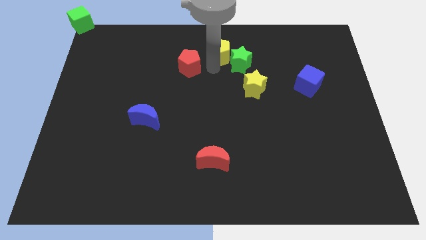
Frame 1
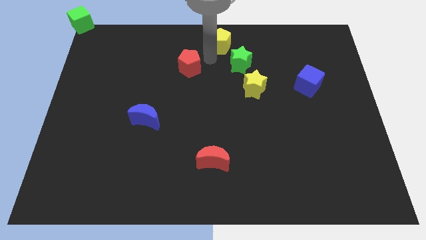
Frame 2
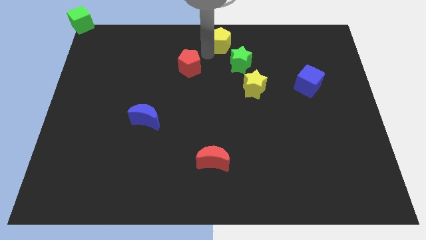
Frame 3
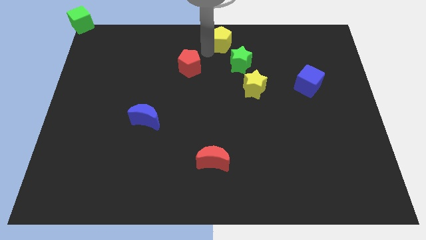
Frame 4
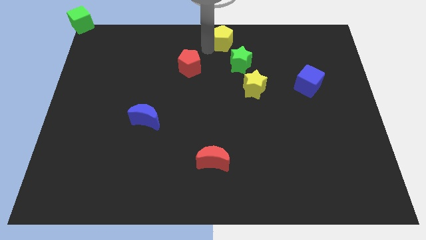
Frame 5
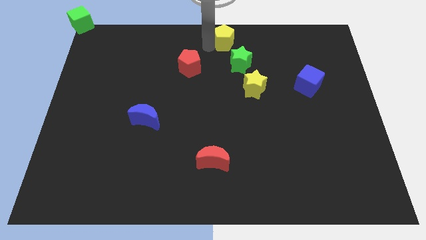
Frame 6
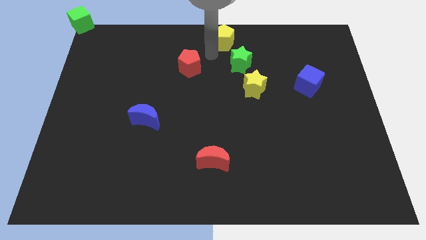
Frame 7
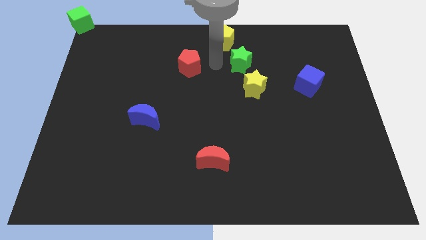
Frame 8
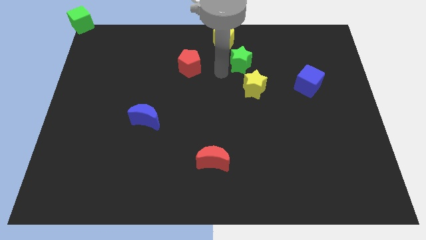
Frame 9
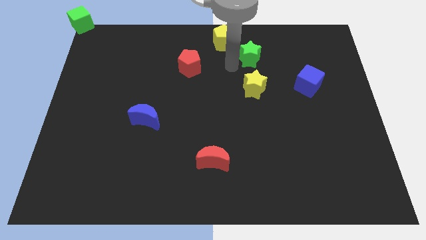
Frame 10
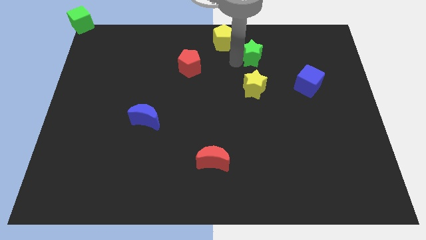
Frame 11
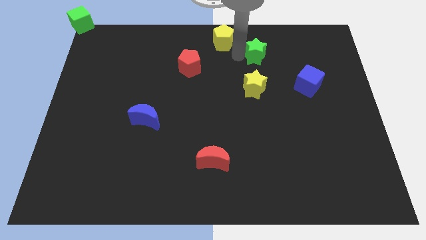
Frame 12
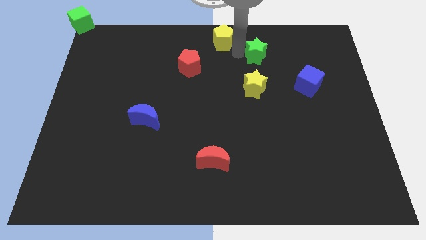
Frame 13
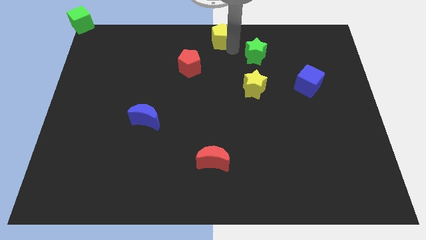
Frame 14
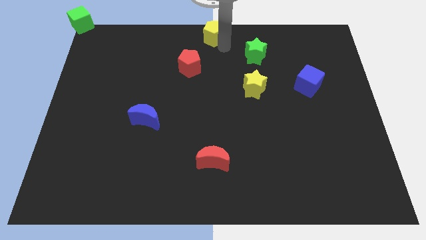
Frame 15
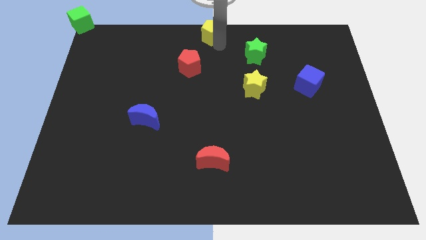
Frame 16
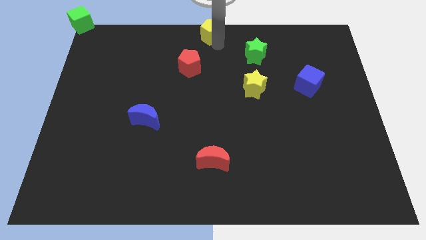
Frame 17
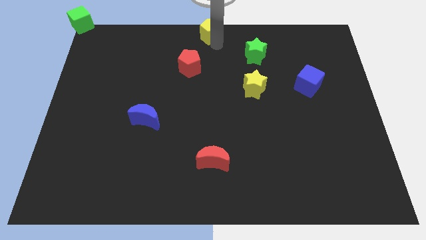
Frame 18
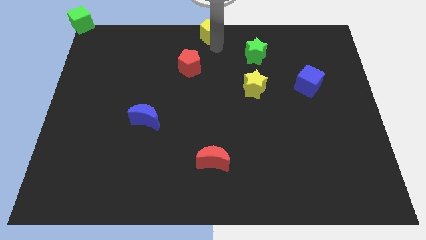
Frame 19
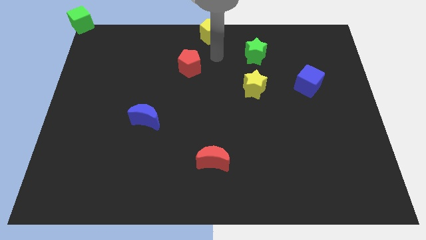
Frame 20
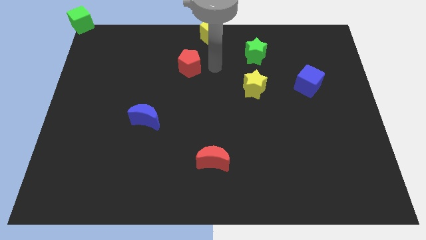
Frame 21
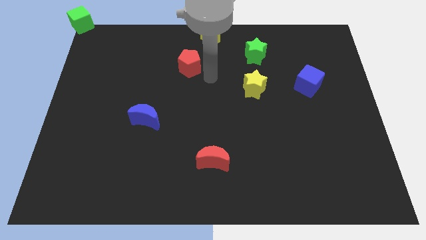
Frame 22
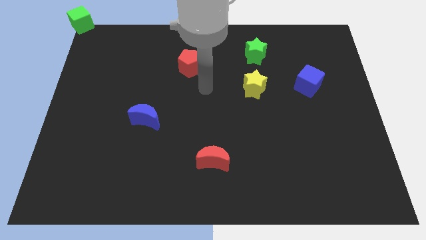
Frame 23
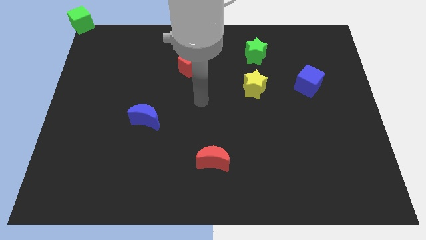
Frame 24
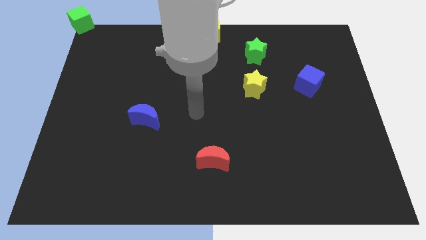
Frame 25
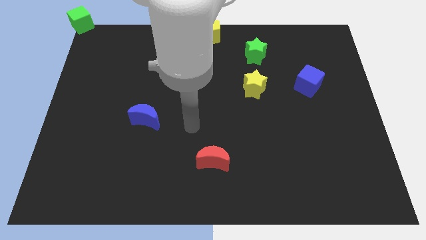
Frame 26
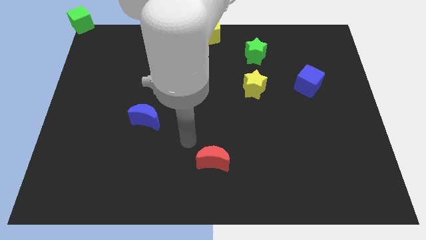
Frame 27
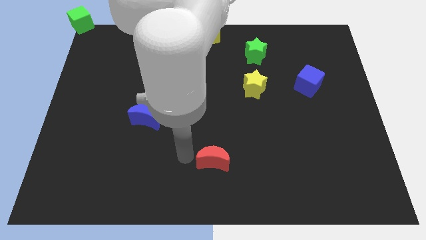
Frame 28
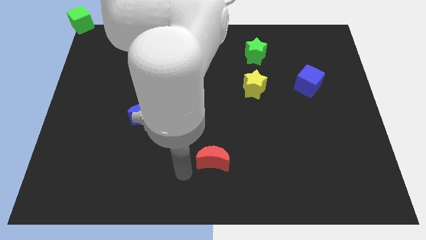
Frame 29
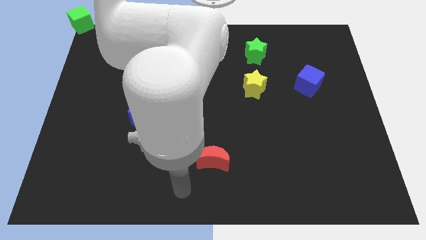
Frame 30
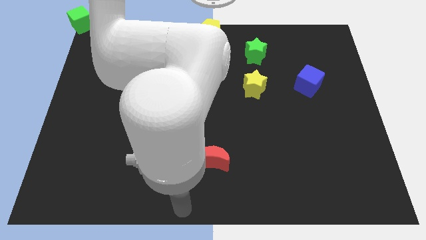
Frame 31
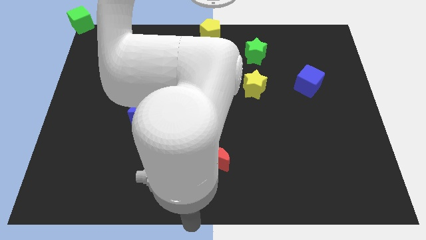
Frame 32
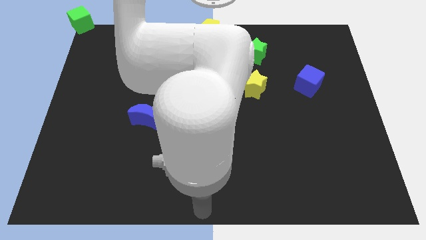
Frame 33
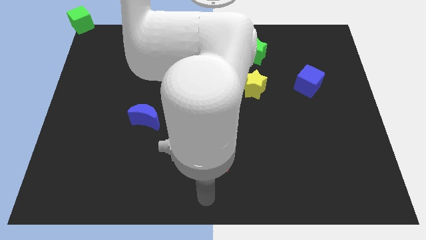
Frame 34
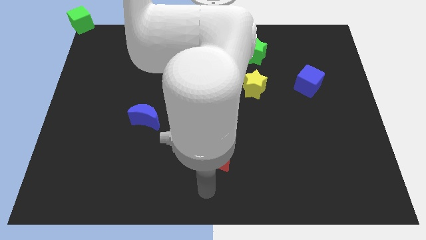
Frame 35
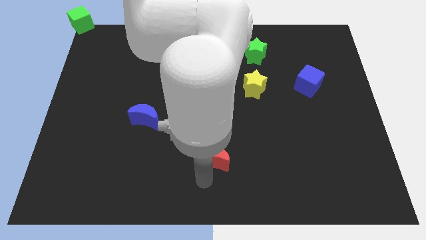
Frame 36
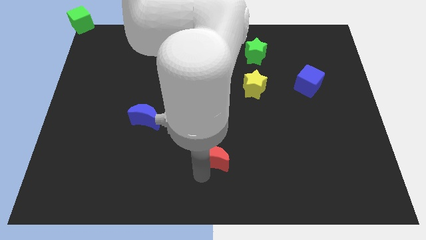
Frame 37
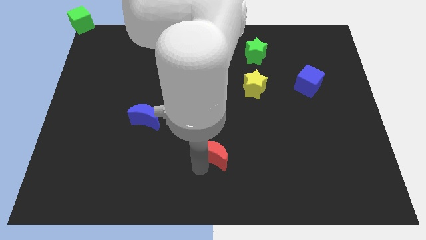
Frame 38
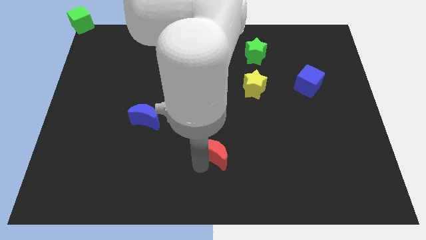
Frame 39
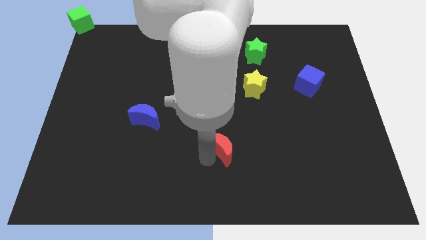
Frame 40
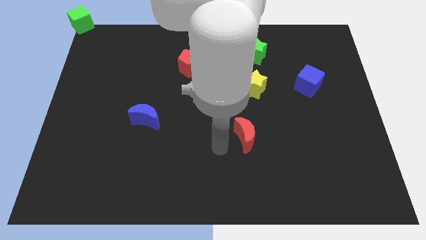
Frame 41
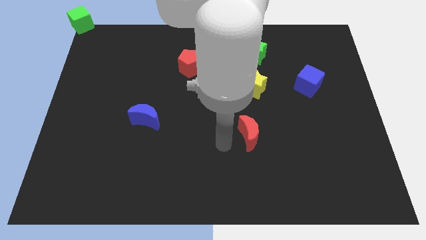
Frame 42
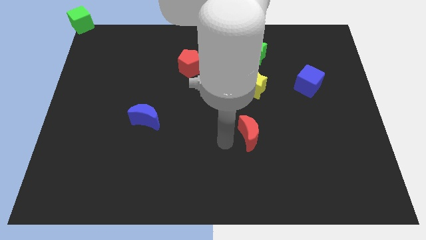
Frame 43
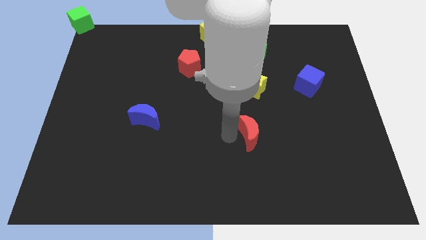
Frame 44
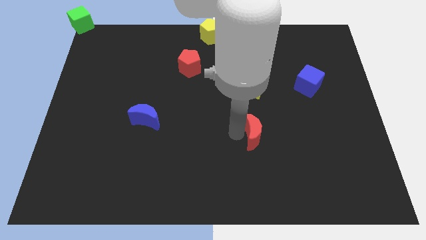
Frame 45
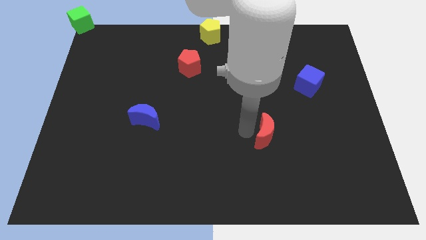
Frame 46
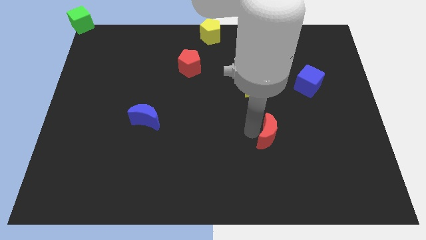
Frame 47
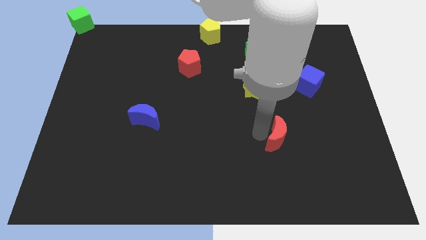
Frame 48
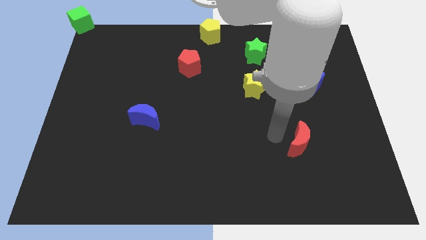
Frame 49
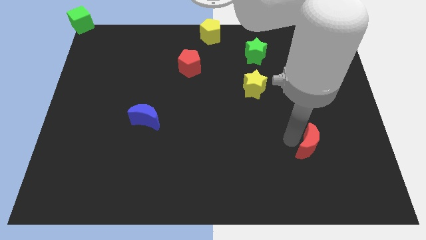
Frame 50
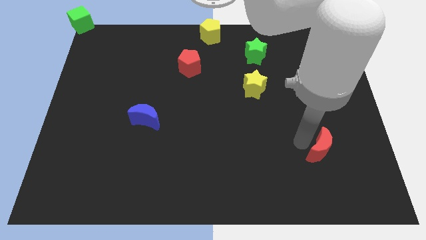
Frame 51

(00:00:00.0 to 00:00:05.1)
place the red moon underneath the blue cube

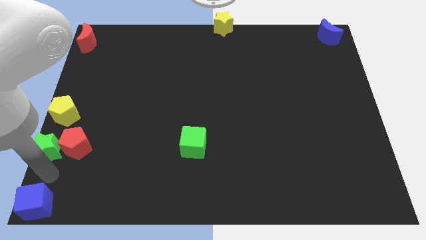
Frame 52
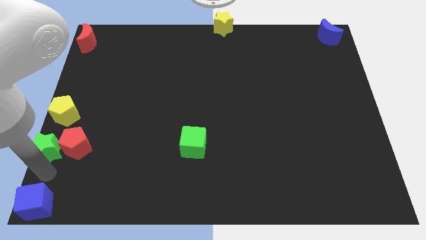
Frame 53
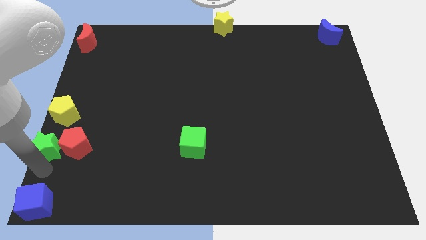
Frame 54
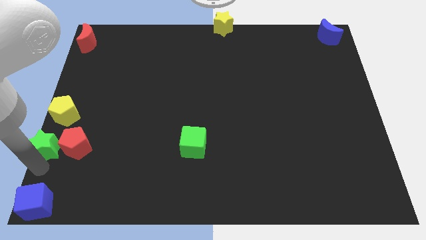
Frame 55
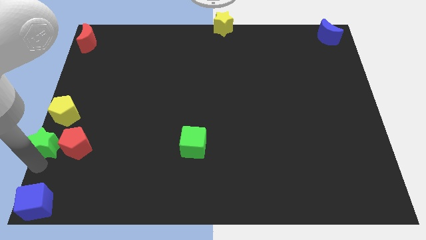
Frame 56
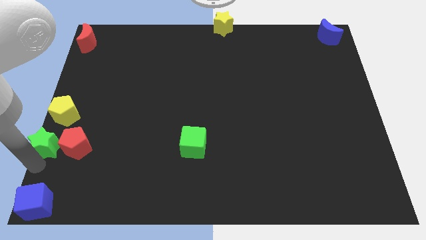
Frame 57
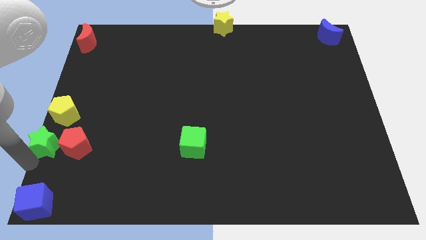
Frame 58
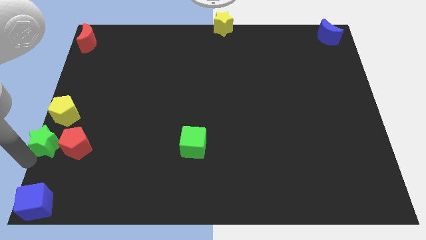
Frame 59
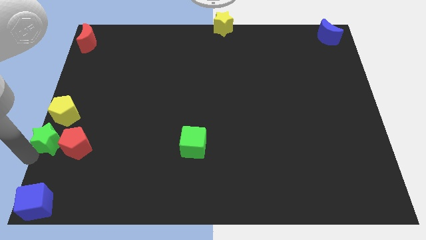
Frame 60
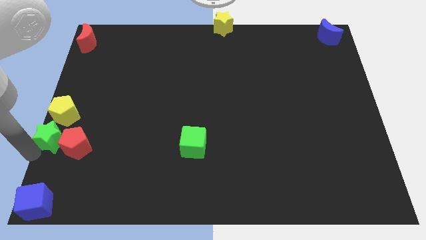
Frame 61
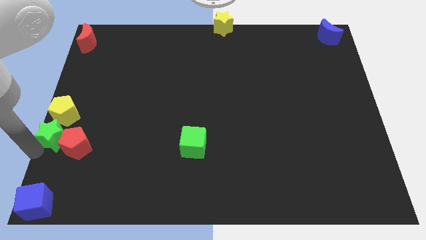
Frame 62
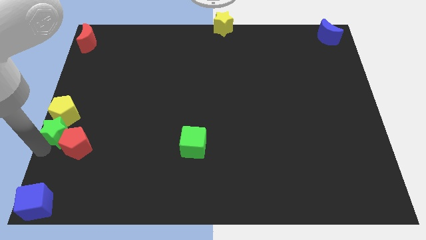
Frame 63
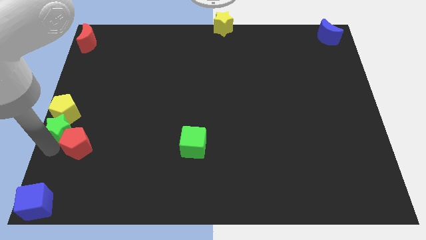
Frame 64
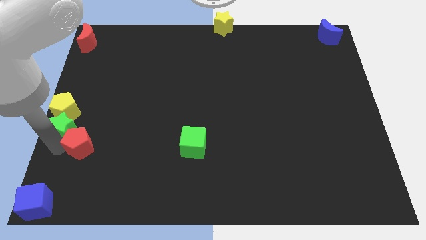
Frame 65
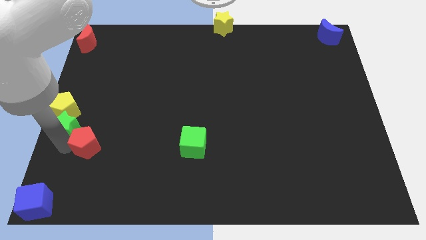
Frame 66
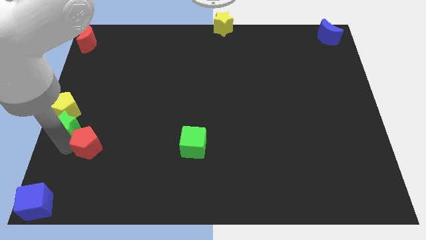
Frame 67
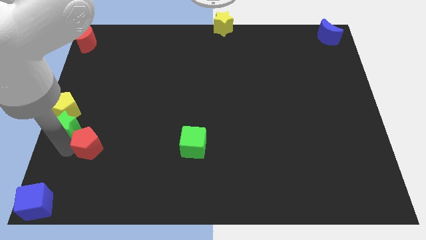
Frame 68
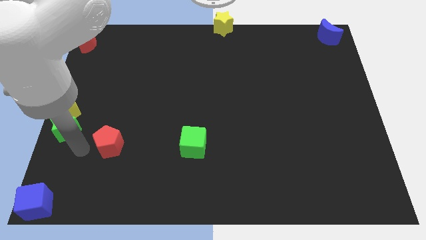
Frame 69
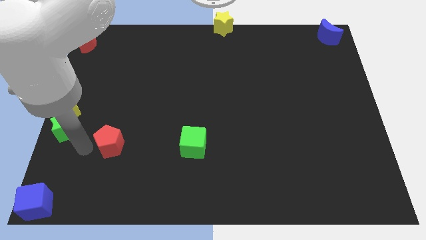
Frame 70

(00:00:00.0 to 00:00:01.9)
place green star below the yellow pentagon

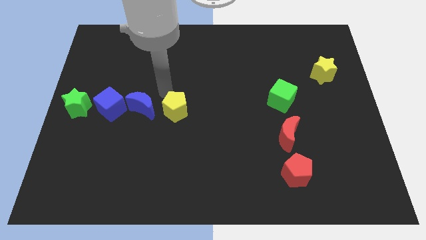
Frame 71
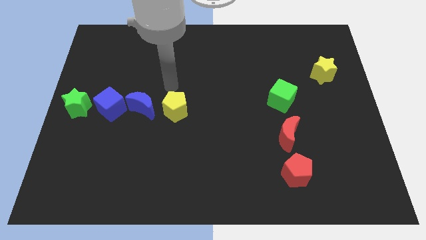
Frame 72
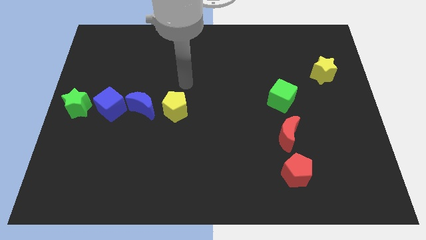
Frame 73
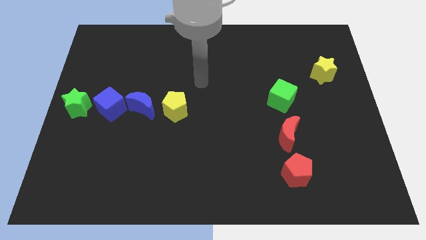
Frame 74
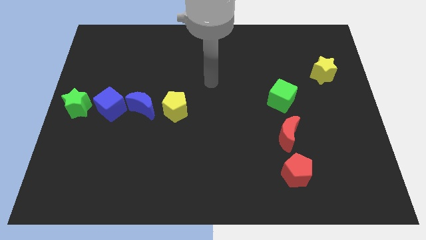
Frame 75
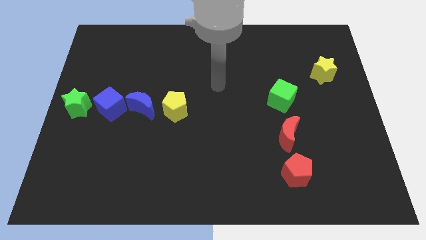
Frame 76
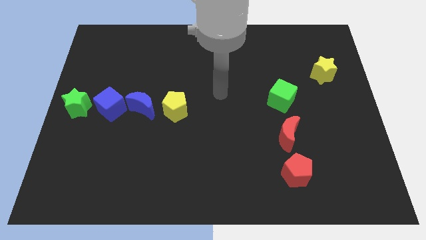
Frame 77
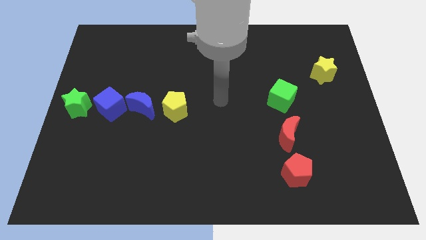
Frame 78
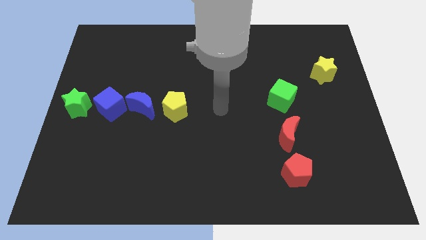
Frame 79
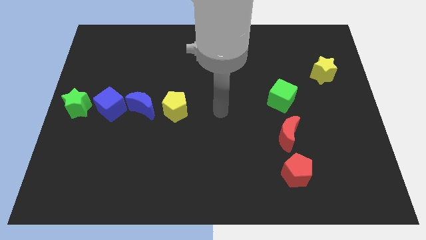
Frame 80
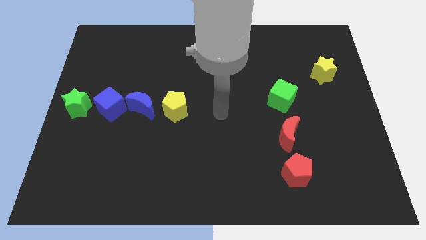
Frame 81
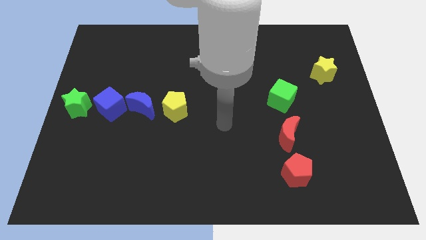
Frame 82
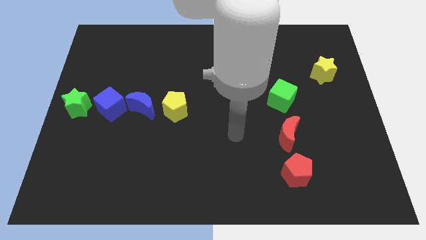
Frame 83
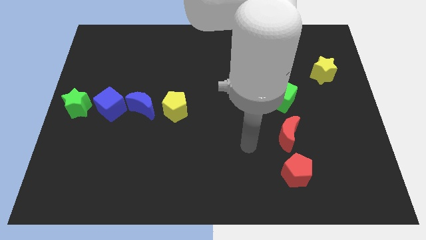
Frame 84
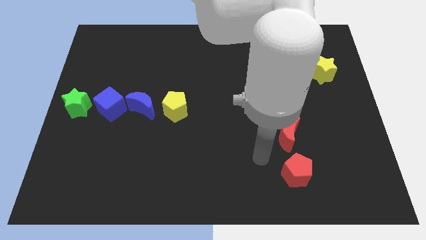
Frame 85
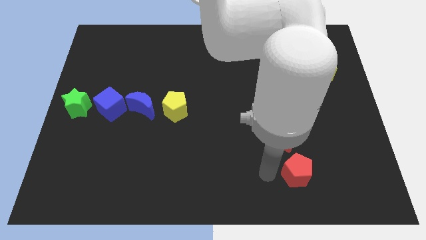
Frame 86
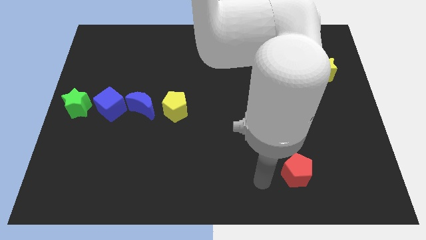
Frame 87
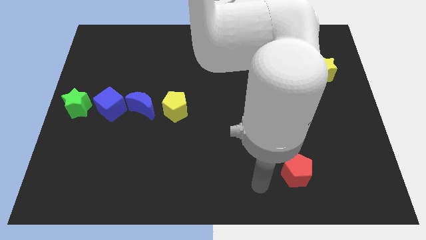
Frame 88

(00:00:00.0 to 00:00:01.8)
place the arm at the left side of the red pentagon
